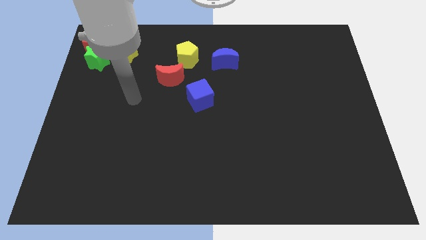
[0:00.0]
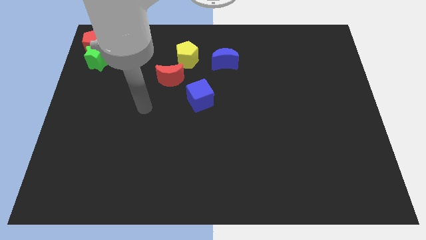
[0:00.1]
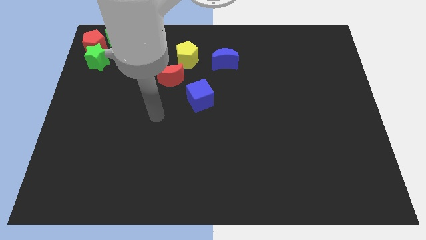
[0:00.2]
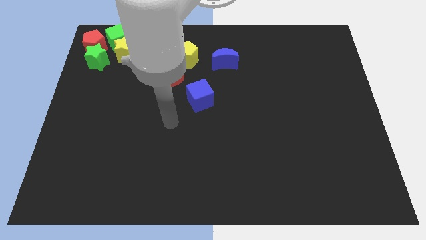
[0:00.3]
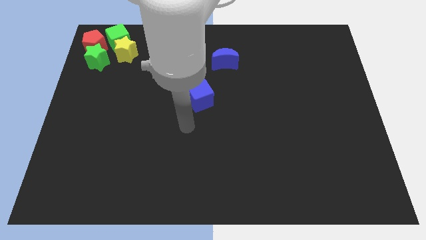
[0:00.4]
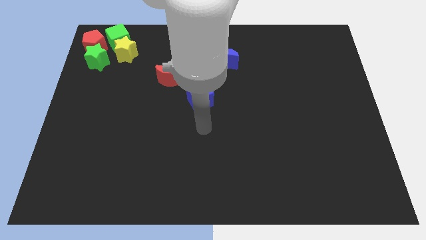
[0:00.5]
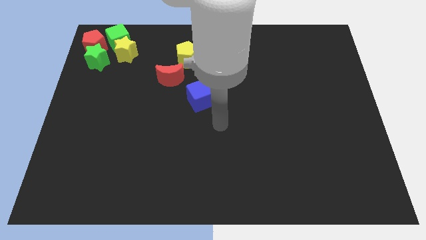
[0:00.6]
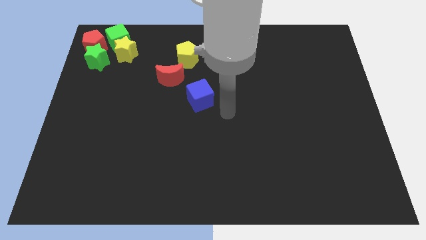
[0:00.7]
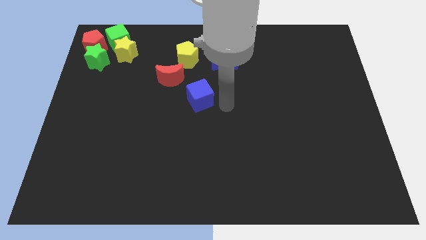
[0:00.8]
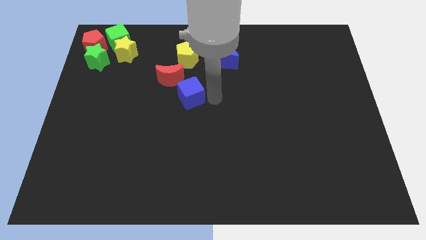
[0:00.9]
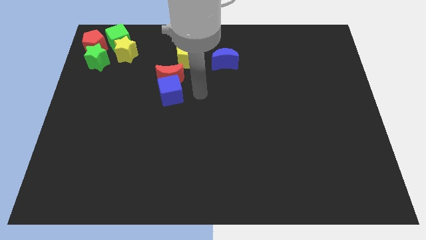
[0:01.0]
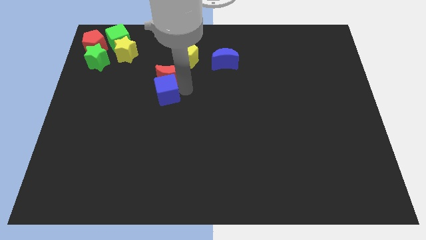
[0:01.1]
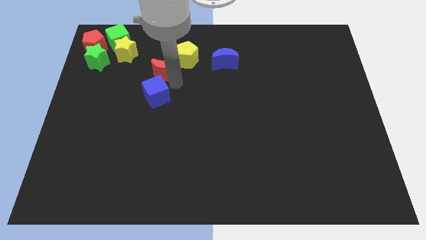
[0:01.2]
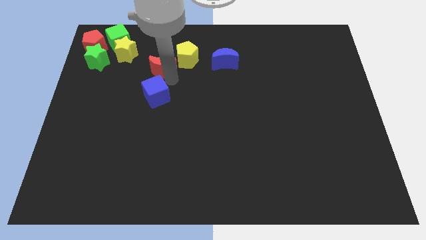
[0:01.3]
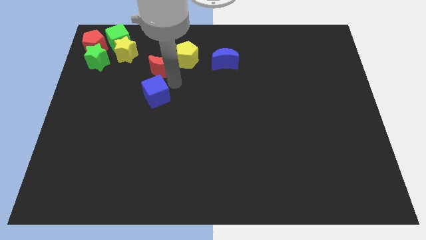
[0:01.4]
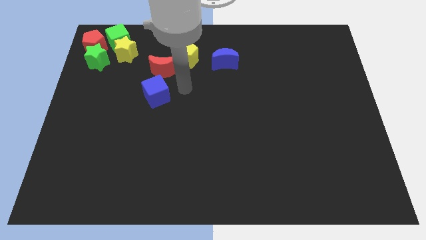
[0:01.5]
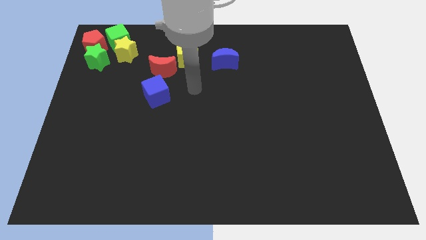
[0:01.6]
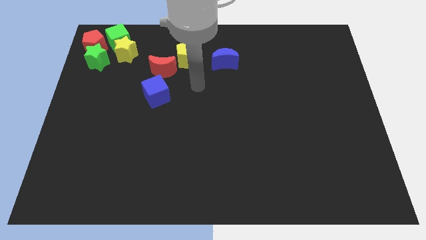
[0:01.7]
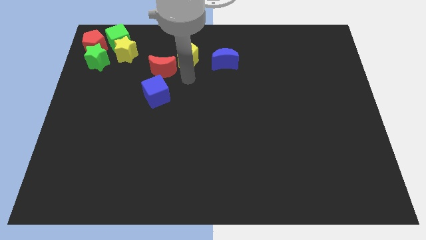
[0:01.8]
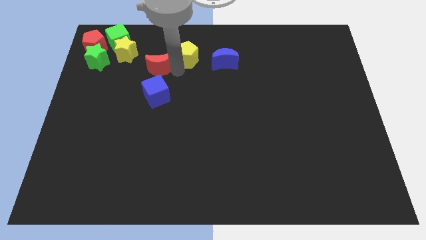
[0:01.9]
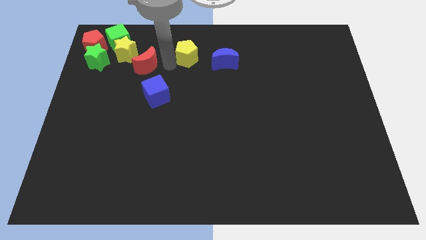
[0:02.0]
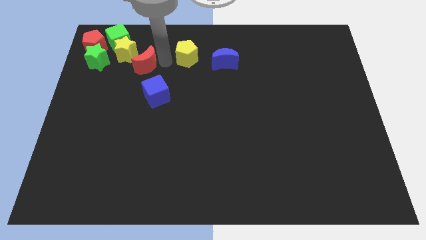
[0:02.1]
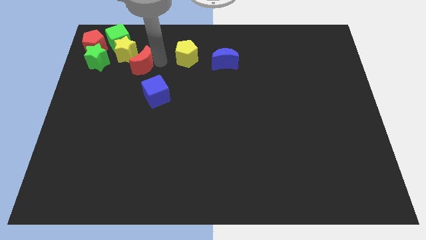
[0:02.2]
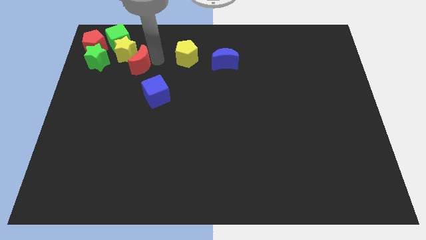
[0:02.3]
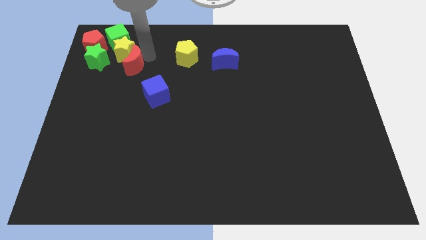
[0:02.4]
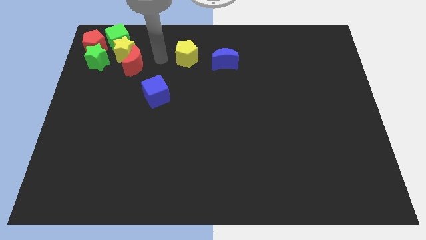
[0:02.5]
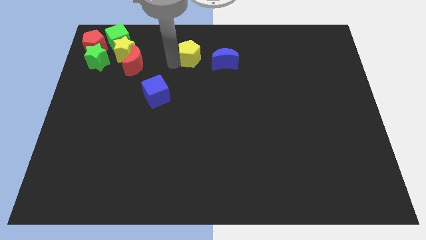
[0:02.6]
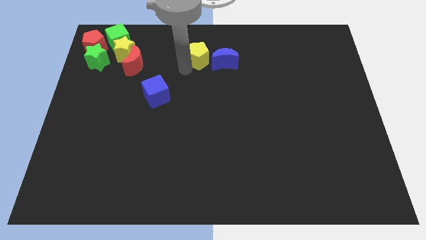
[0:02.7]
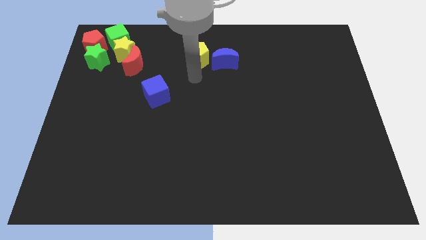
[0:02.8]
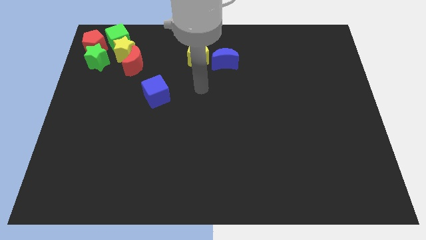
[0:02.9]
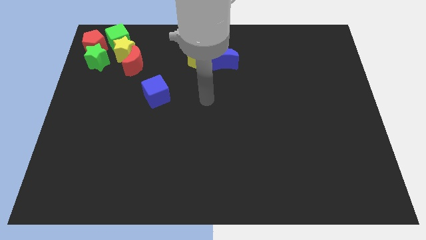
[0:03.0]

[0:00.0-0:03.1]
place the red crescent to the bottom of the yellow star

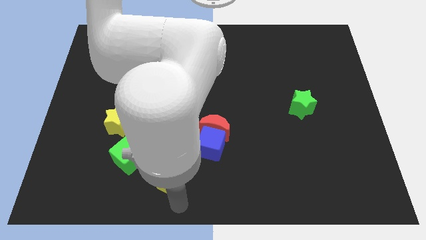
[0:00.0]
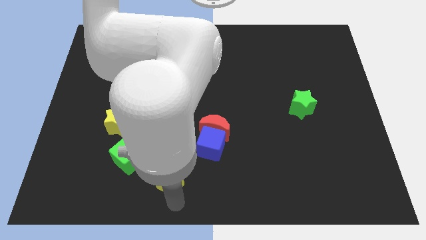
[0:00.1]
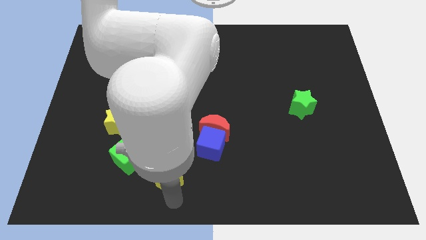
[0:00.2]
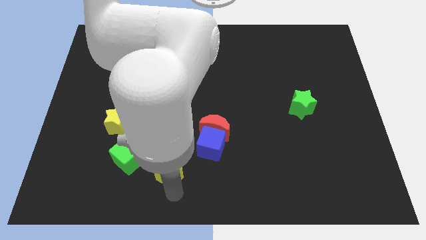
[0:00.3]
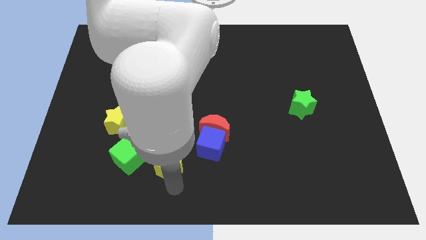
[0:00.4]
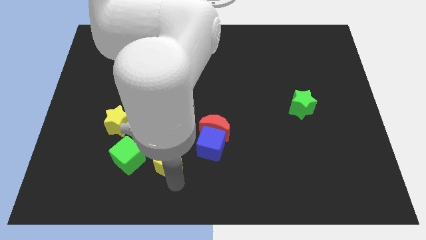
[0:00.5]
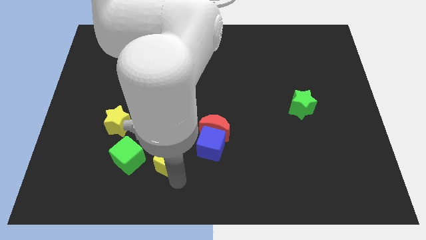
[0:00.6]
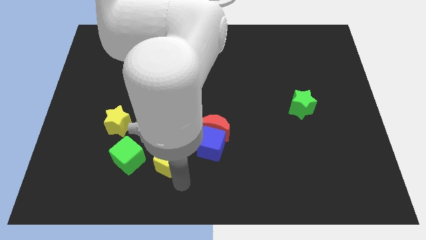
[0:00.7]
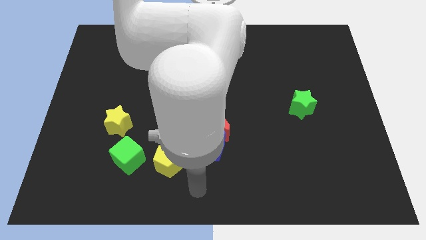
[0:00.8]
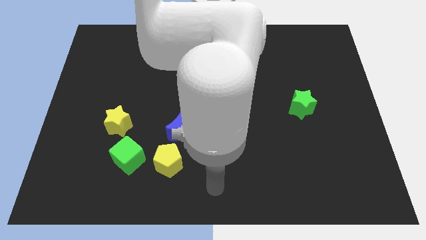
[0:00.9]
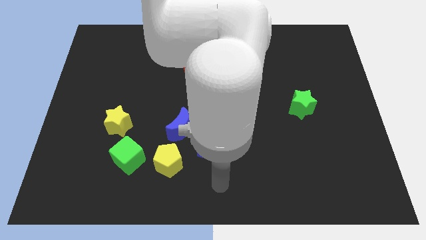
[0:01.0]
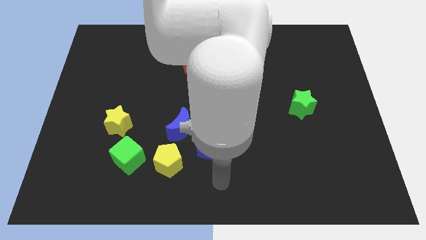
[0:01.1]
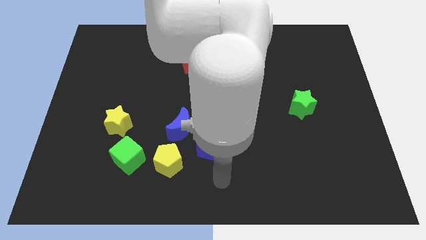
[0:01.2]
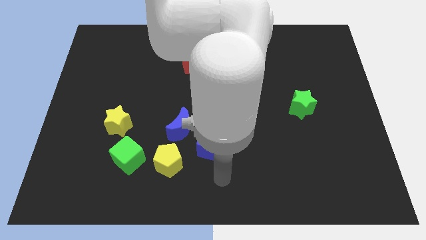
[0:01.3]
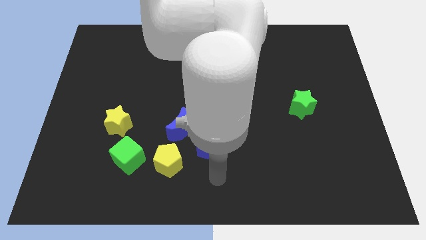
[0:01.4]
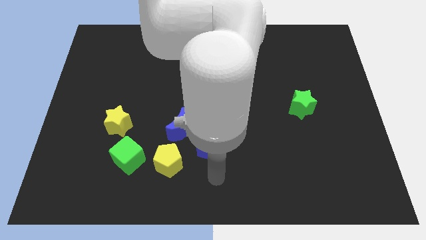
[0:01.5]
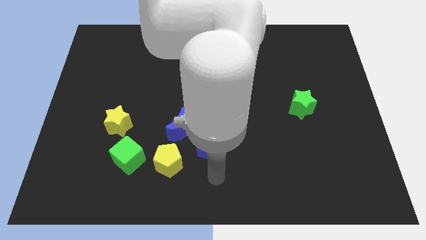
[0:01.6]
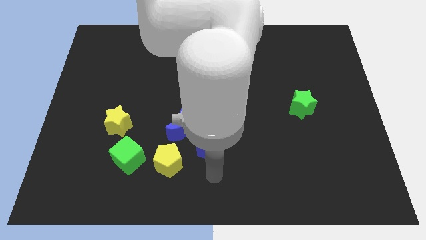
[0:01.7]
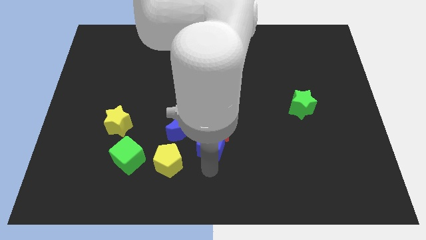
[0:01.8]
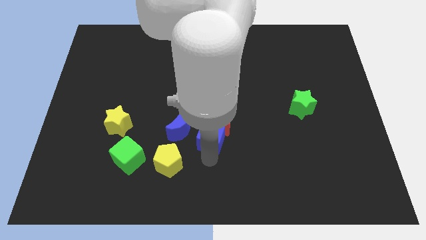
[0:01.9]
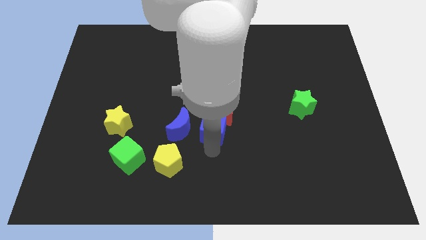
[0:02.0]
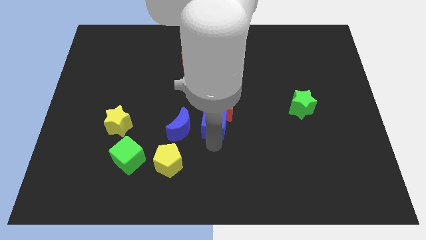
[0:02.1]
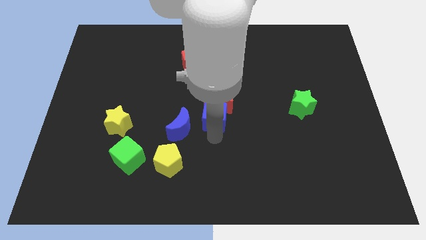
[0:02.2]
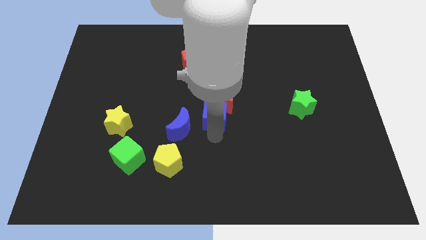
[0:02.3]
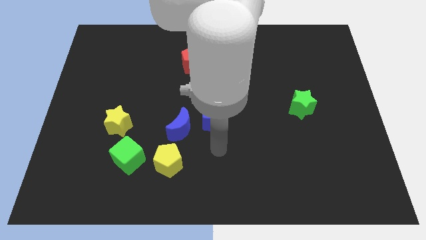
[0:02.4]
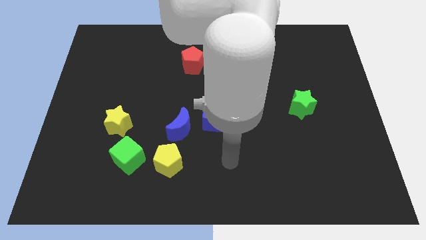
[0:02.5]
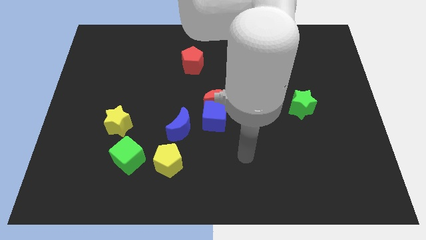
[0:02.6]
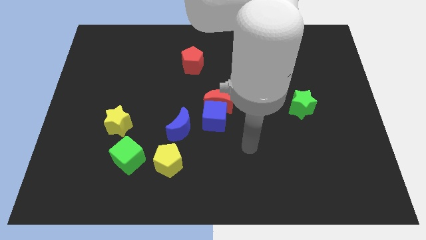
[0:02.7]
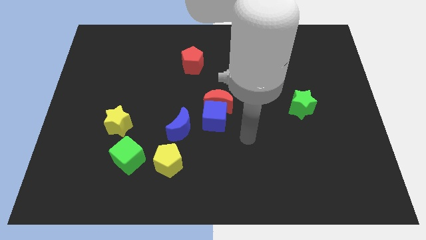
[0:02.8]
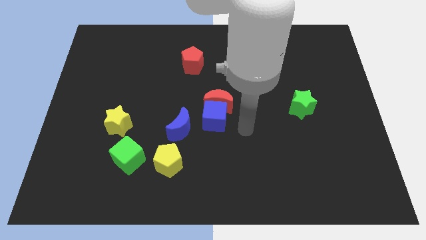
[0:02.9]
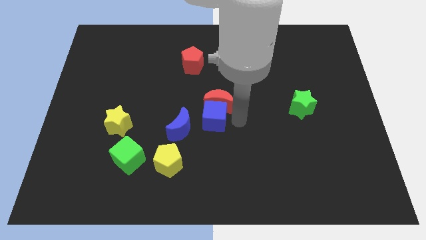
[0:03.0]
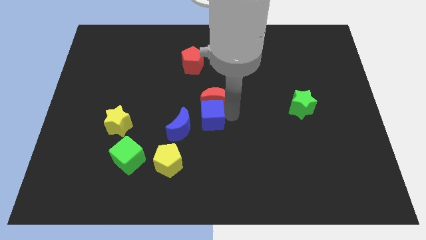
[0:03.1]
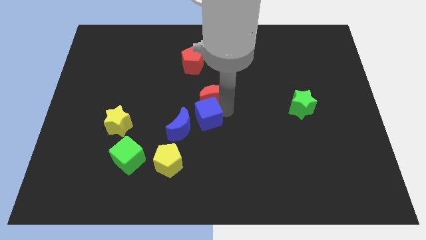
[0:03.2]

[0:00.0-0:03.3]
push the blue cube and the yellow pentagon diagonal to each other

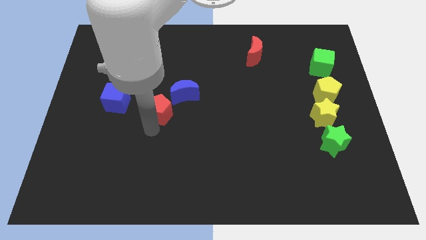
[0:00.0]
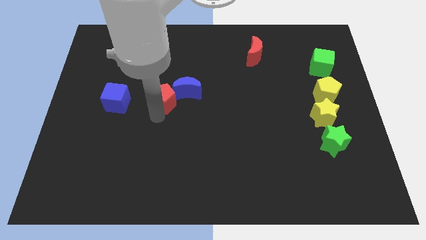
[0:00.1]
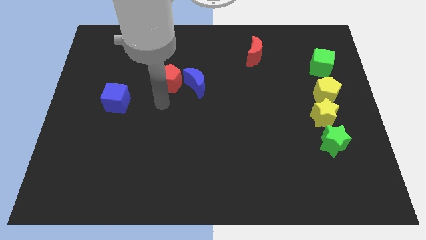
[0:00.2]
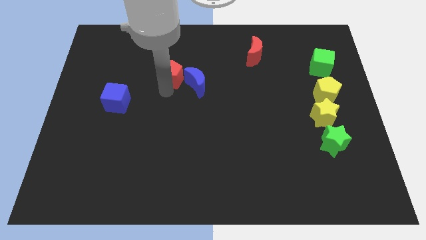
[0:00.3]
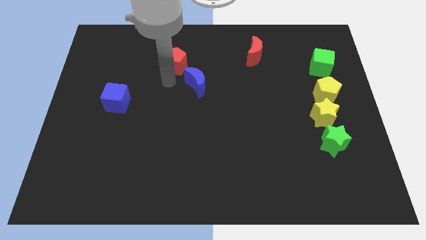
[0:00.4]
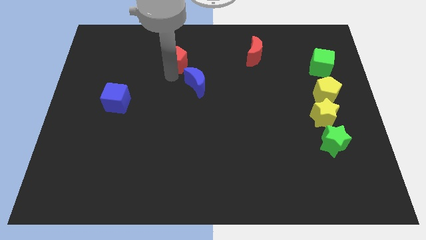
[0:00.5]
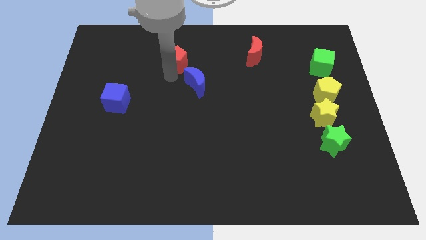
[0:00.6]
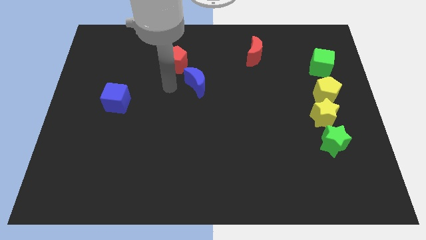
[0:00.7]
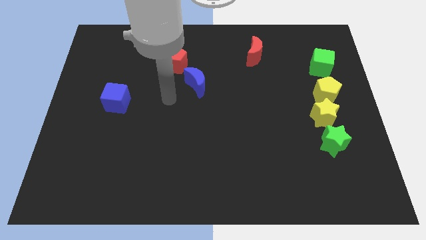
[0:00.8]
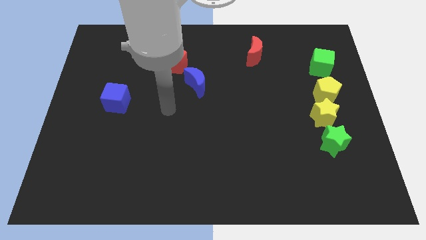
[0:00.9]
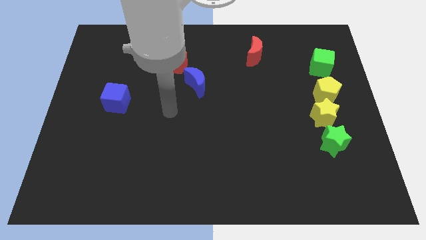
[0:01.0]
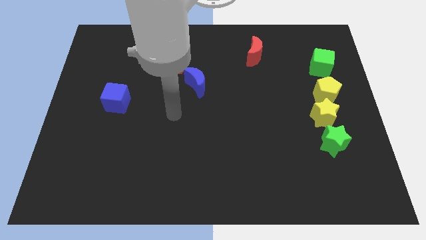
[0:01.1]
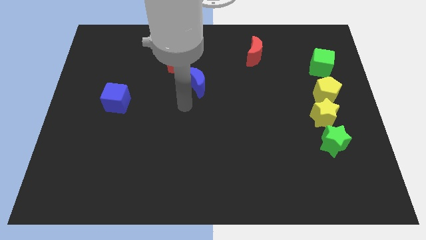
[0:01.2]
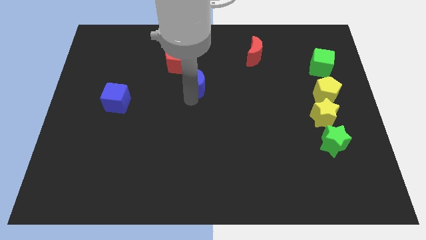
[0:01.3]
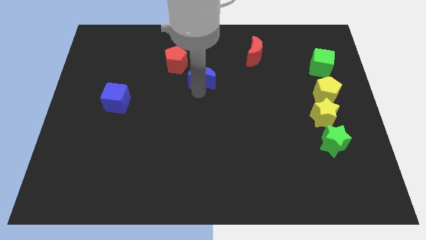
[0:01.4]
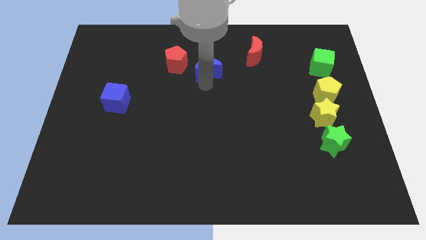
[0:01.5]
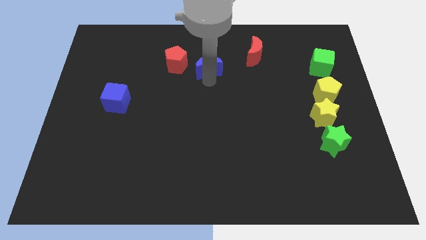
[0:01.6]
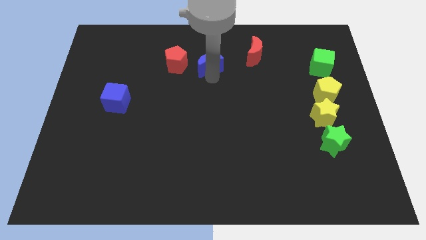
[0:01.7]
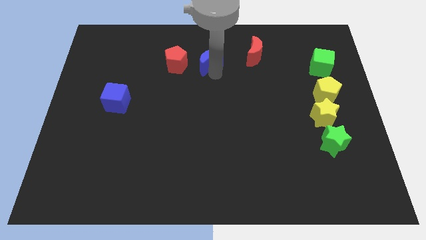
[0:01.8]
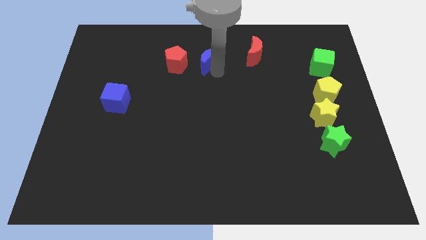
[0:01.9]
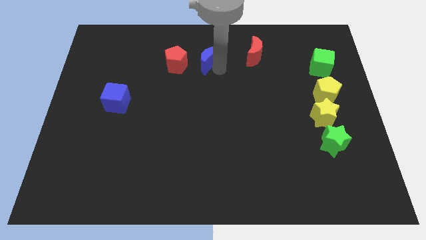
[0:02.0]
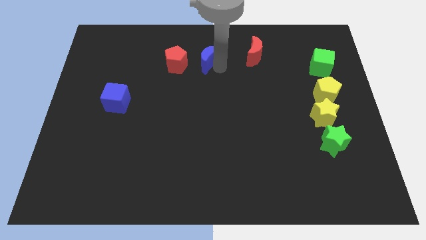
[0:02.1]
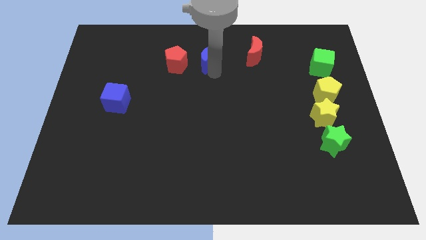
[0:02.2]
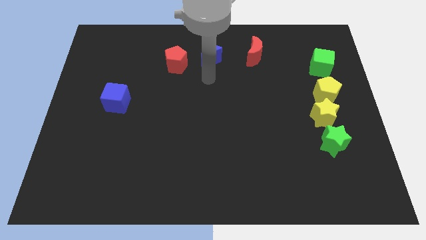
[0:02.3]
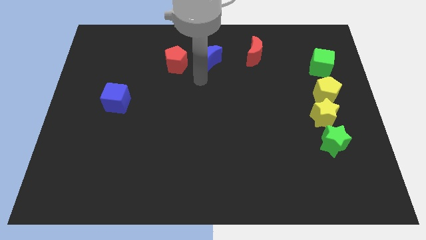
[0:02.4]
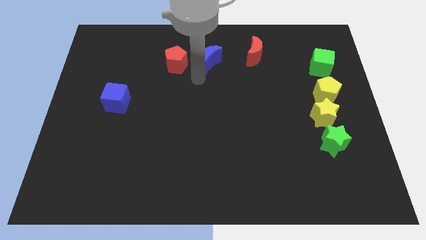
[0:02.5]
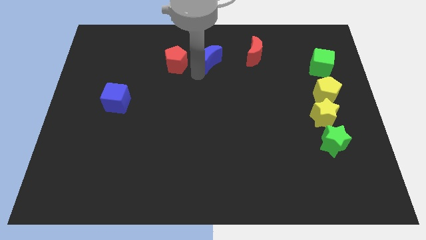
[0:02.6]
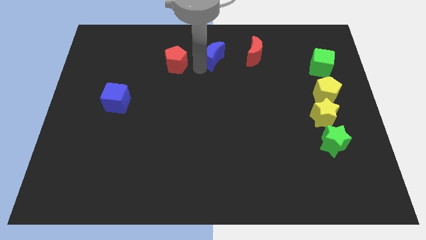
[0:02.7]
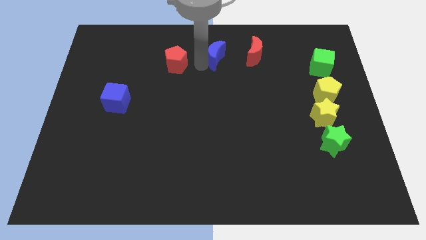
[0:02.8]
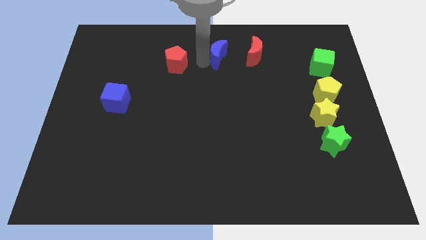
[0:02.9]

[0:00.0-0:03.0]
arrange the red pentagon and blue crescent to the left of the red crescent to form a horizontal line
